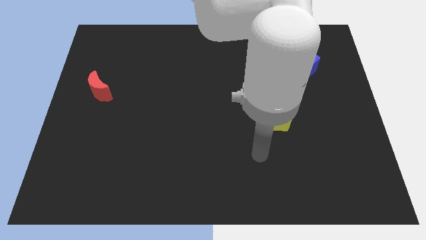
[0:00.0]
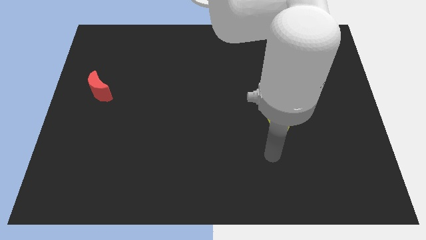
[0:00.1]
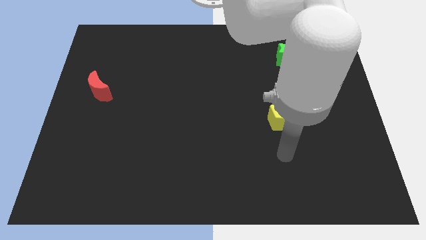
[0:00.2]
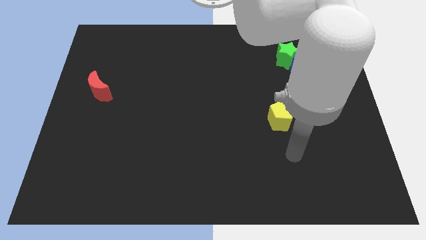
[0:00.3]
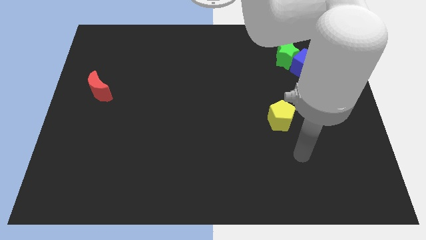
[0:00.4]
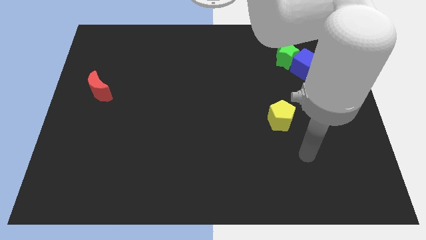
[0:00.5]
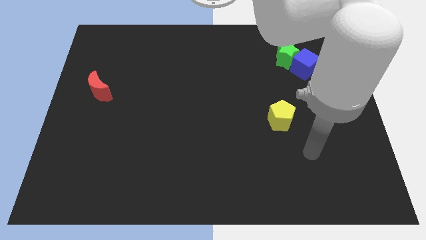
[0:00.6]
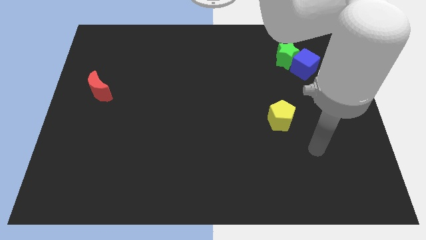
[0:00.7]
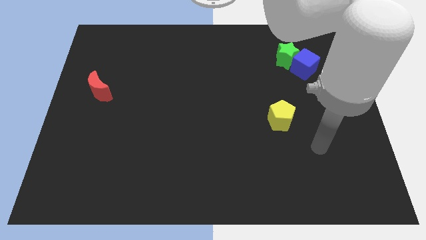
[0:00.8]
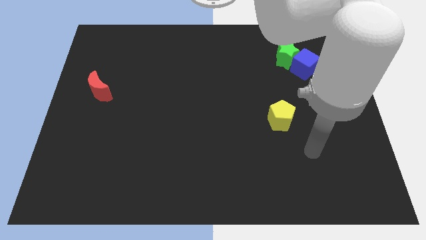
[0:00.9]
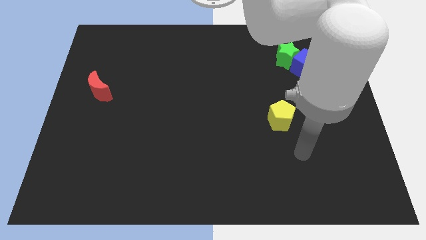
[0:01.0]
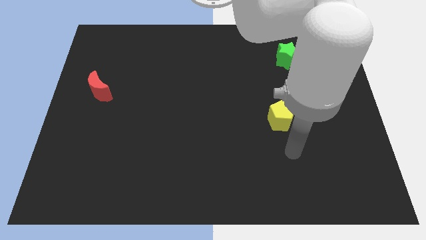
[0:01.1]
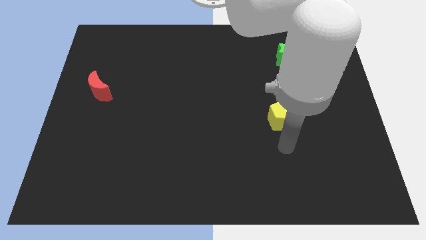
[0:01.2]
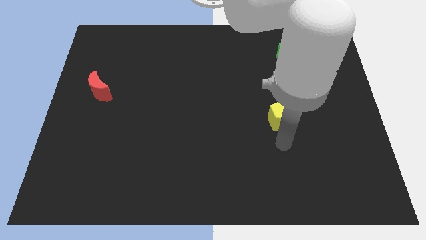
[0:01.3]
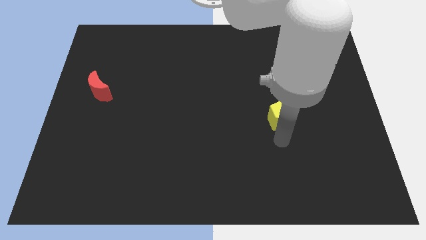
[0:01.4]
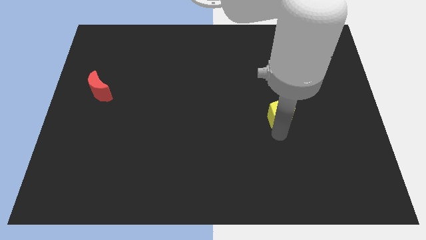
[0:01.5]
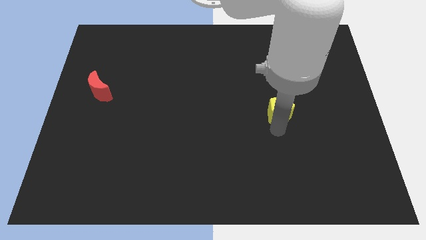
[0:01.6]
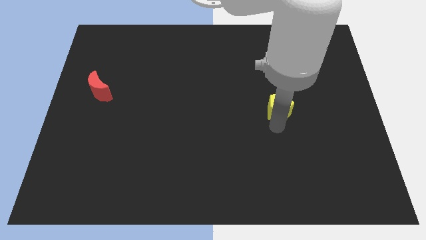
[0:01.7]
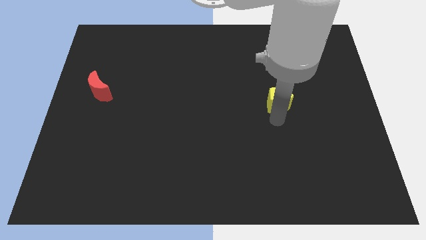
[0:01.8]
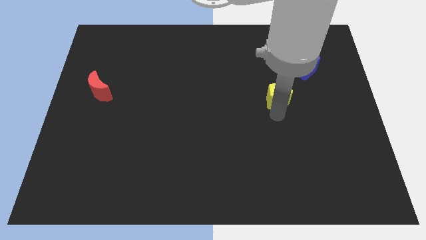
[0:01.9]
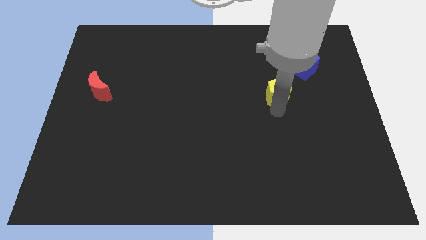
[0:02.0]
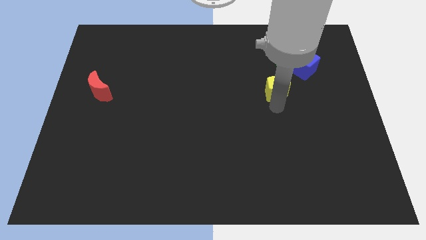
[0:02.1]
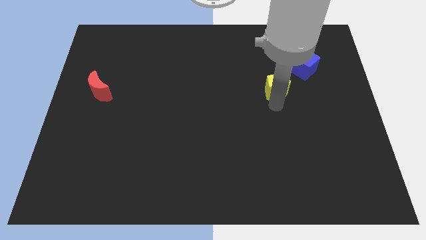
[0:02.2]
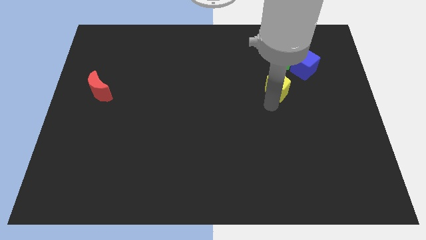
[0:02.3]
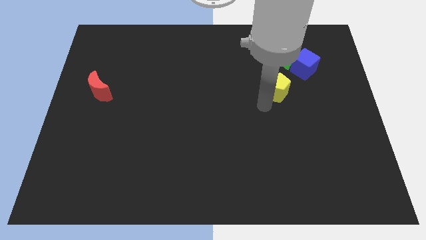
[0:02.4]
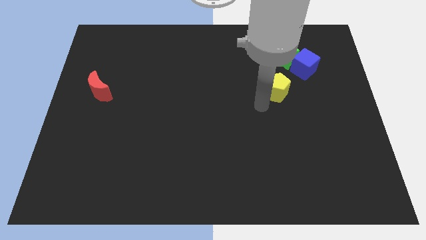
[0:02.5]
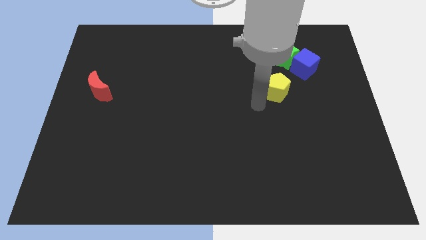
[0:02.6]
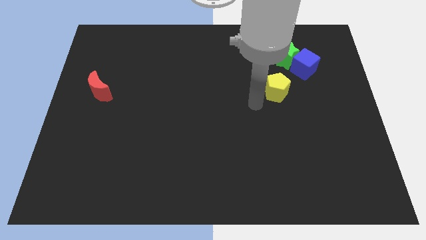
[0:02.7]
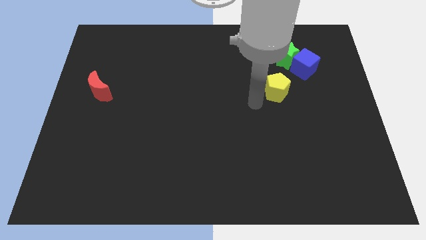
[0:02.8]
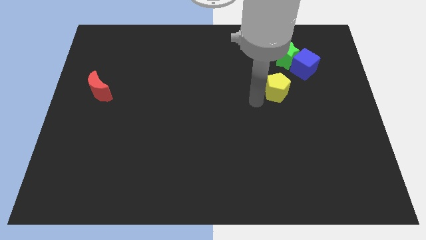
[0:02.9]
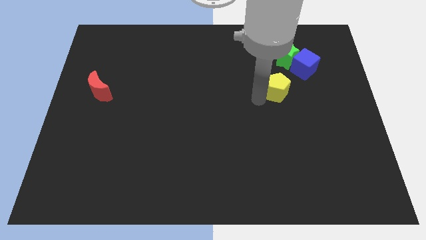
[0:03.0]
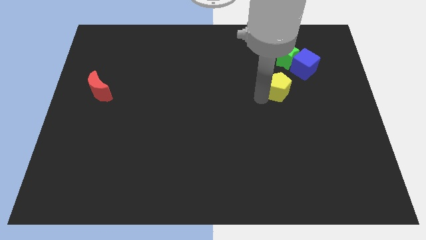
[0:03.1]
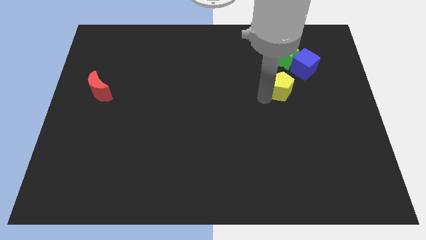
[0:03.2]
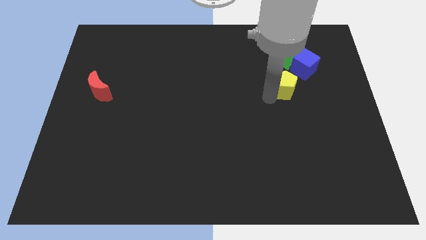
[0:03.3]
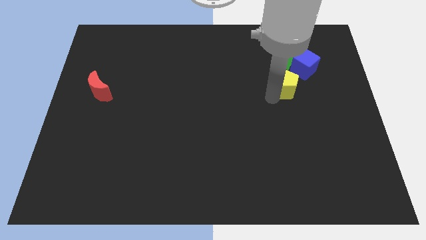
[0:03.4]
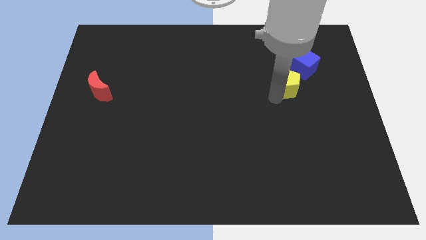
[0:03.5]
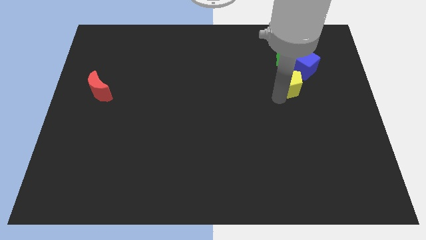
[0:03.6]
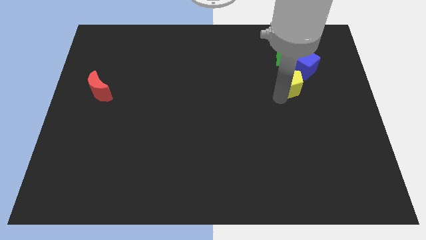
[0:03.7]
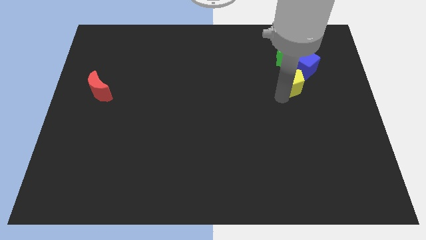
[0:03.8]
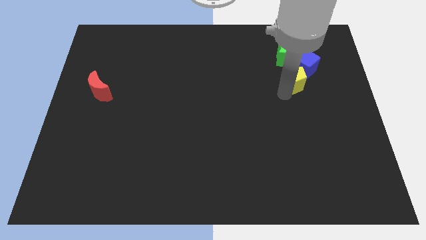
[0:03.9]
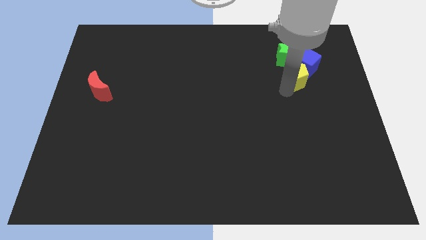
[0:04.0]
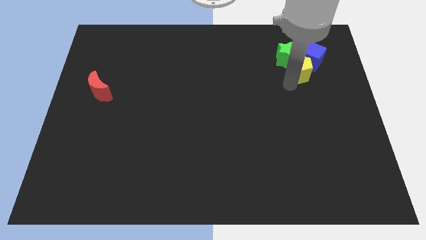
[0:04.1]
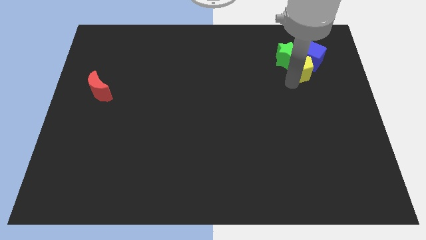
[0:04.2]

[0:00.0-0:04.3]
move the yellow pentagon next to the blue block

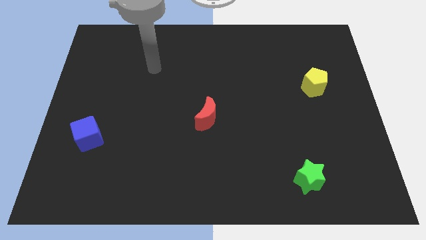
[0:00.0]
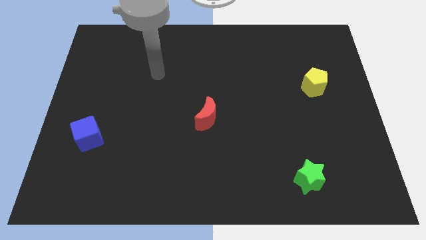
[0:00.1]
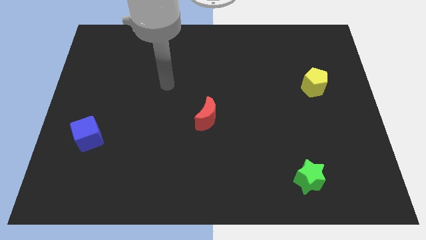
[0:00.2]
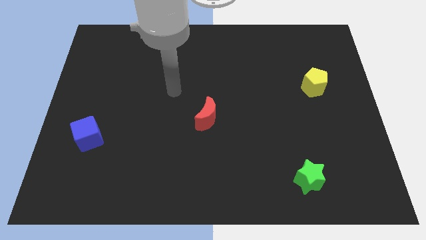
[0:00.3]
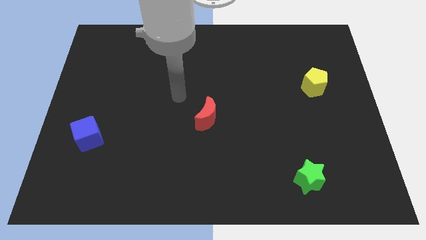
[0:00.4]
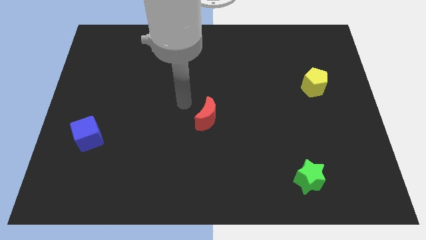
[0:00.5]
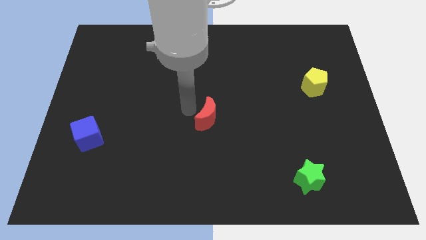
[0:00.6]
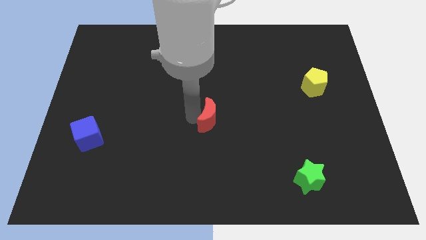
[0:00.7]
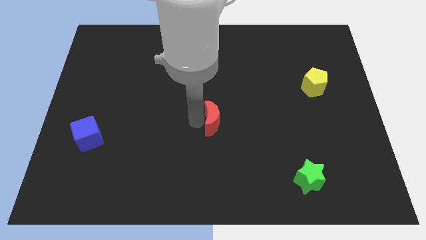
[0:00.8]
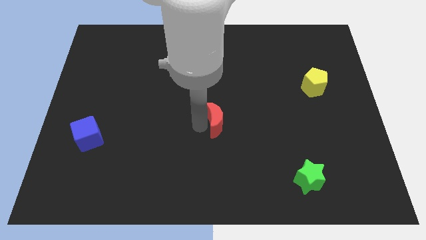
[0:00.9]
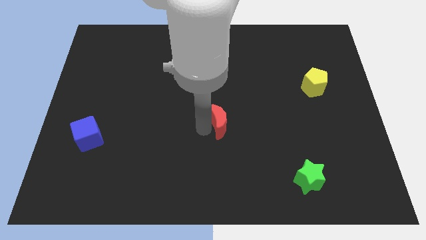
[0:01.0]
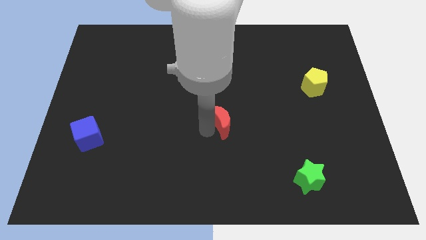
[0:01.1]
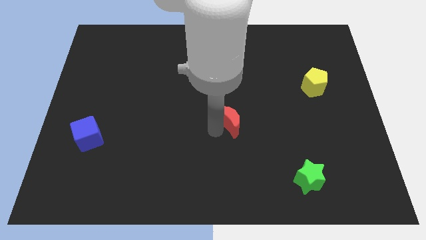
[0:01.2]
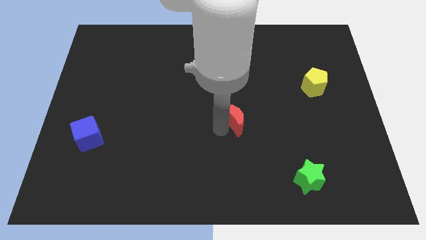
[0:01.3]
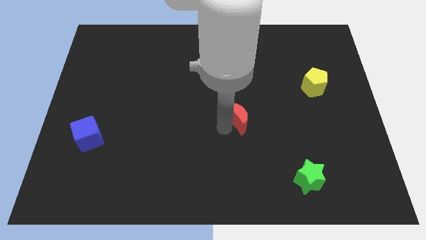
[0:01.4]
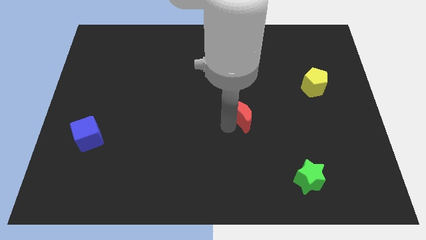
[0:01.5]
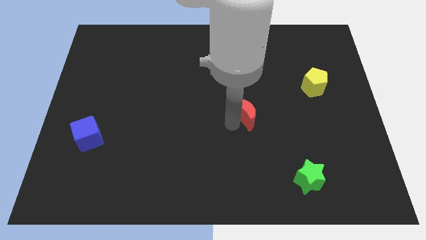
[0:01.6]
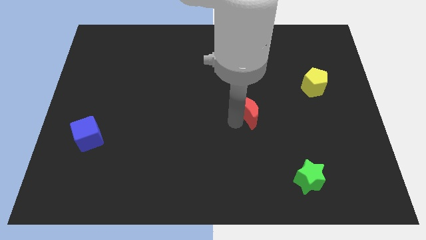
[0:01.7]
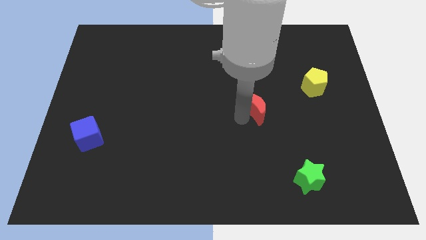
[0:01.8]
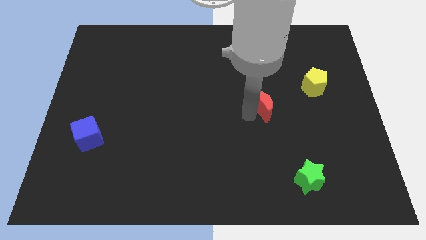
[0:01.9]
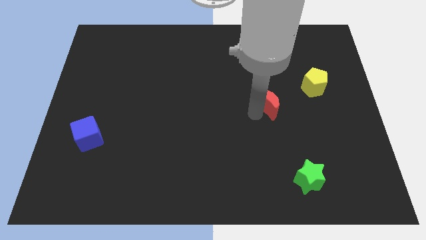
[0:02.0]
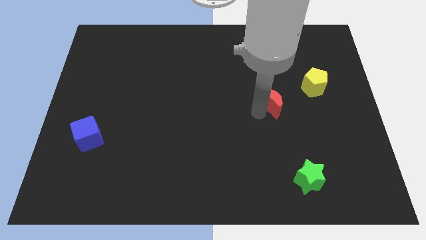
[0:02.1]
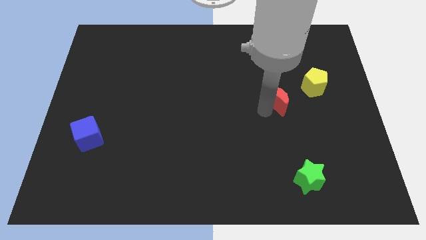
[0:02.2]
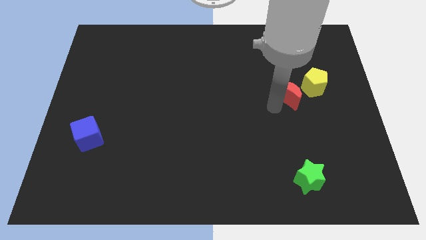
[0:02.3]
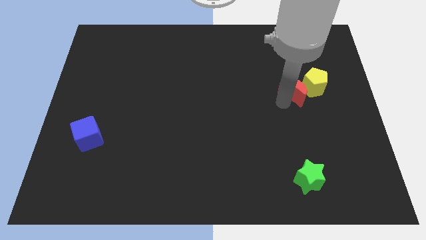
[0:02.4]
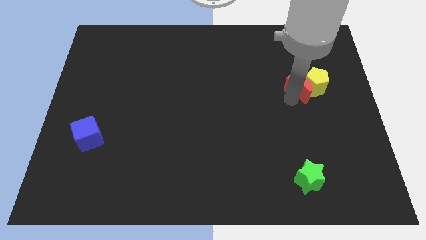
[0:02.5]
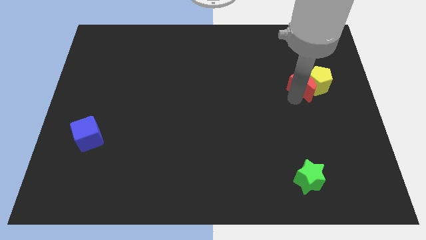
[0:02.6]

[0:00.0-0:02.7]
slide the red moon towards the yellow block

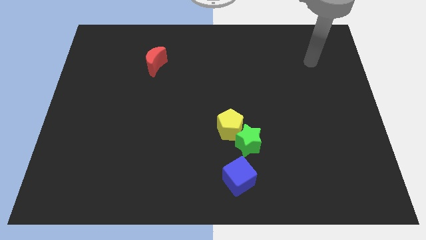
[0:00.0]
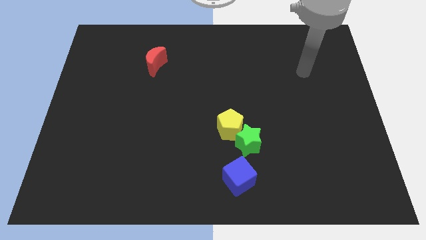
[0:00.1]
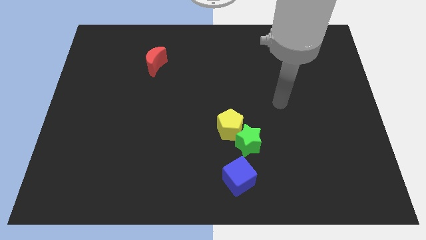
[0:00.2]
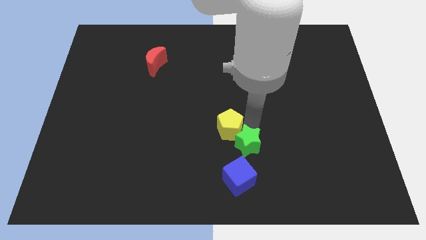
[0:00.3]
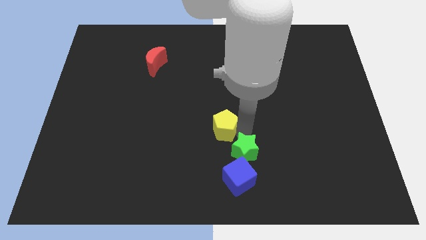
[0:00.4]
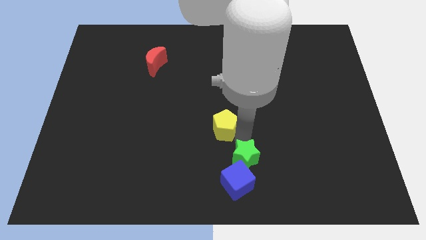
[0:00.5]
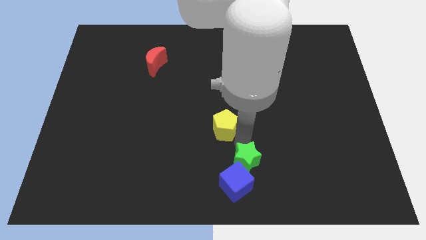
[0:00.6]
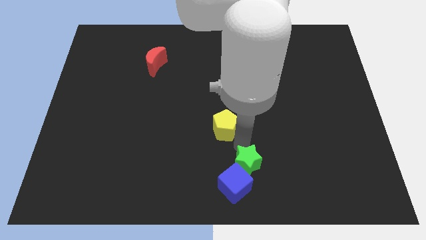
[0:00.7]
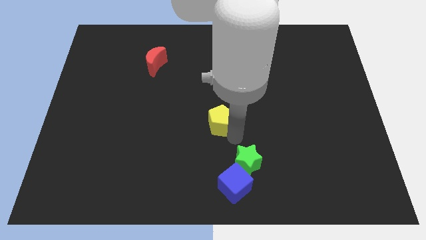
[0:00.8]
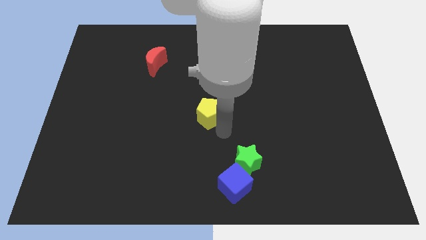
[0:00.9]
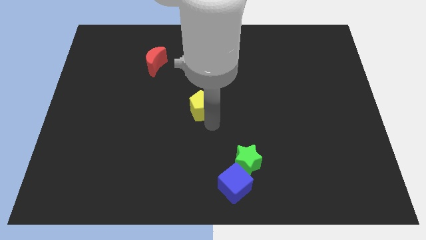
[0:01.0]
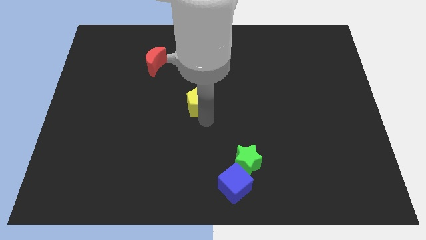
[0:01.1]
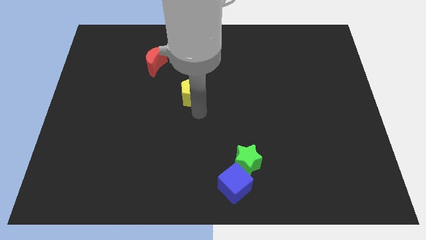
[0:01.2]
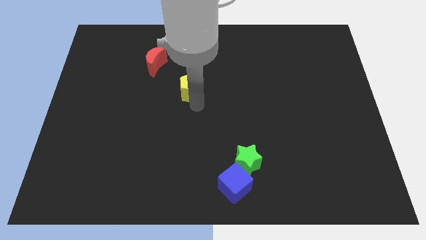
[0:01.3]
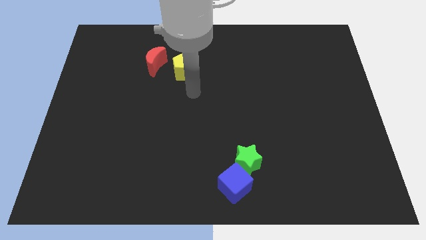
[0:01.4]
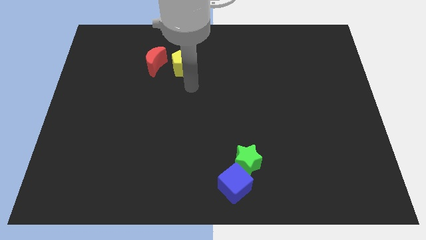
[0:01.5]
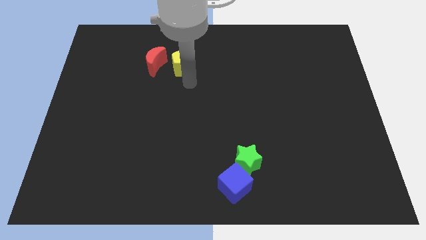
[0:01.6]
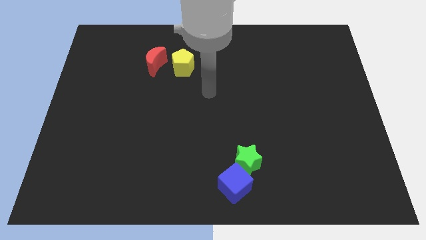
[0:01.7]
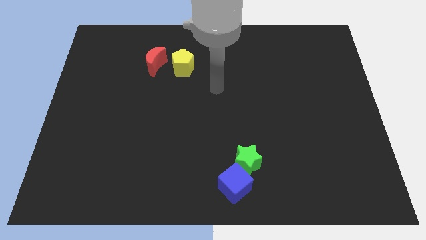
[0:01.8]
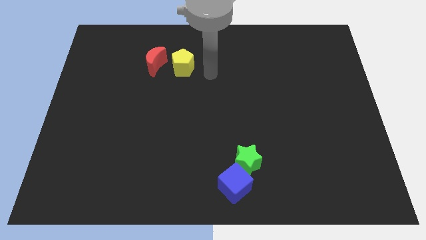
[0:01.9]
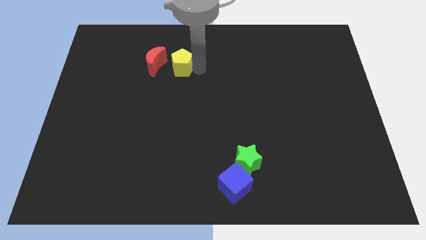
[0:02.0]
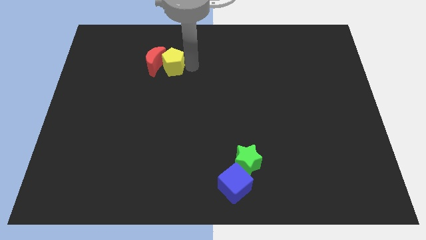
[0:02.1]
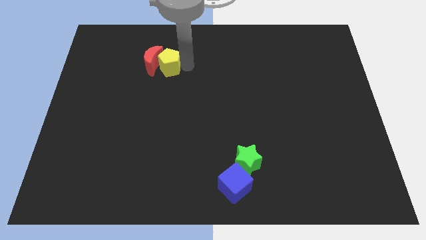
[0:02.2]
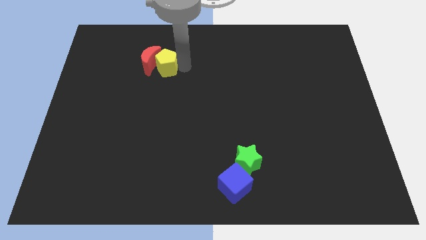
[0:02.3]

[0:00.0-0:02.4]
push the yellow pentagon close to the red block
